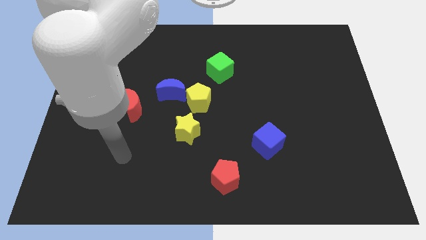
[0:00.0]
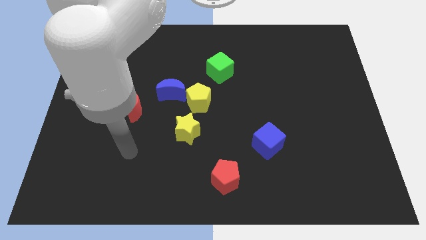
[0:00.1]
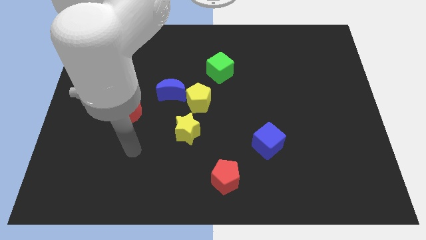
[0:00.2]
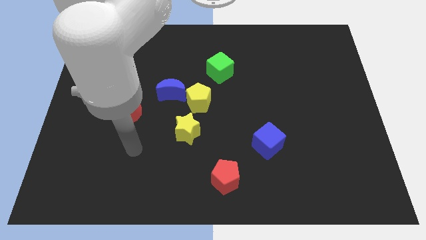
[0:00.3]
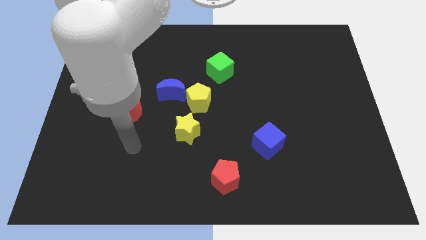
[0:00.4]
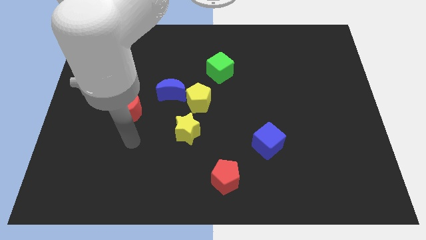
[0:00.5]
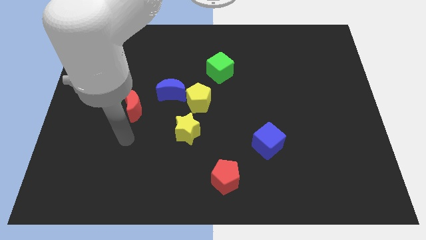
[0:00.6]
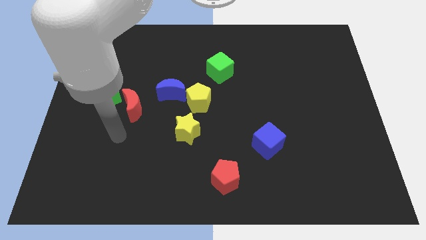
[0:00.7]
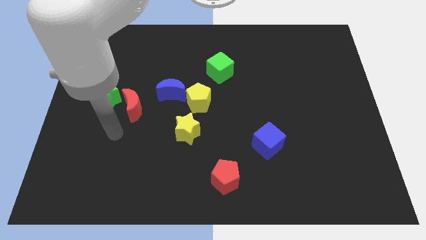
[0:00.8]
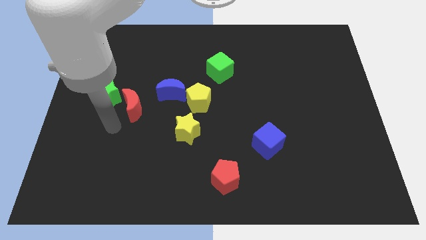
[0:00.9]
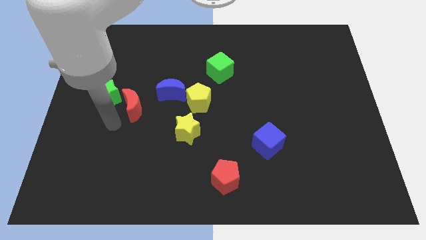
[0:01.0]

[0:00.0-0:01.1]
move arm near red moon

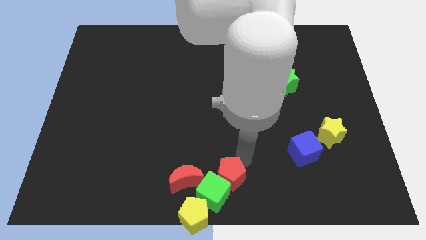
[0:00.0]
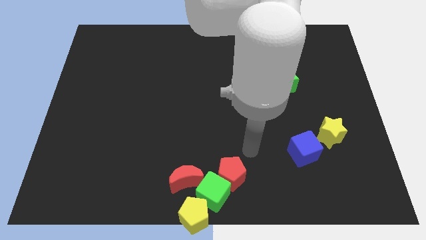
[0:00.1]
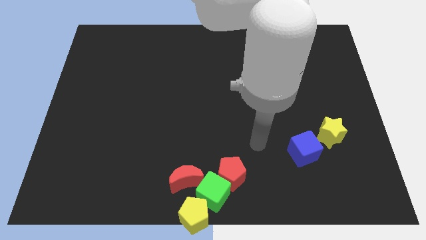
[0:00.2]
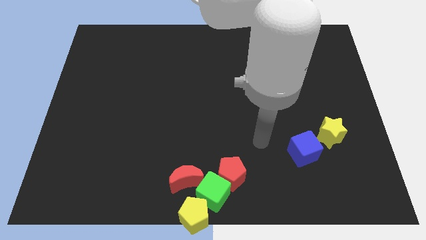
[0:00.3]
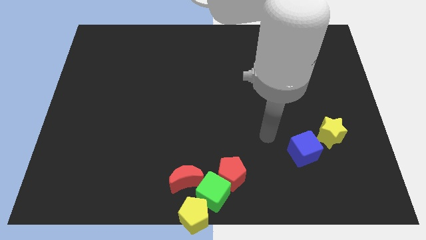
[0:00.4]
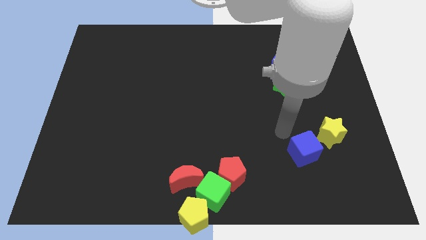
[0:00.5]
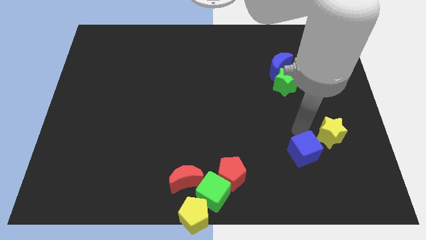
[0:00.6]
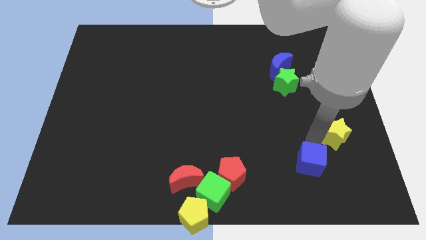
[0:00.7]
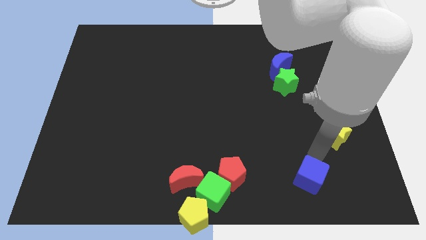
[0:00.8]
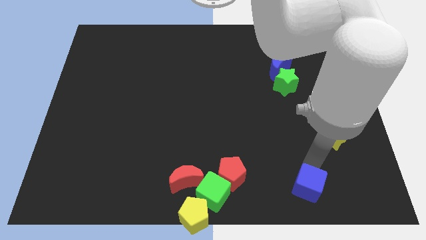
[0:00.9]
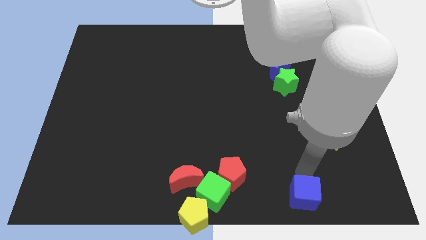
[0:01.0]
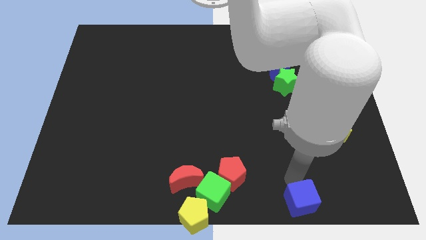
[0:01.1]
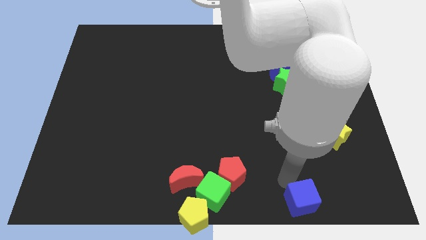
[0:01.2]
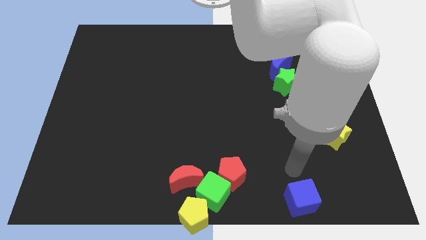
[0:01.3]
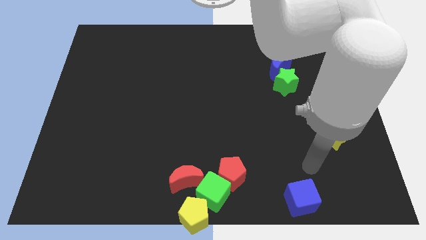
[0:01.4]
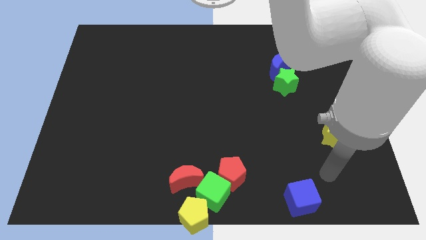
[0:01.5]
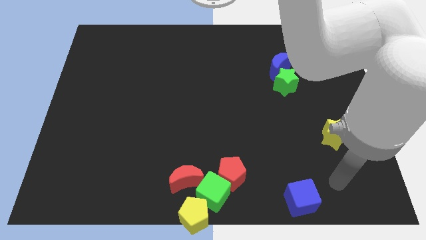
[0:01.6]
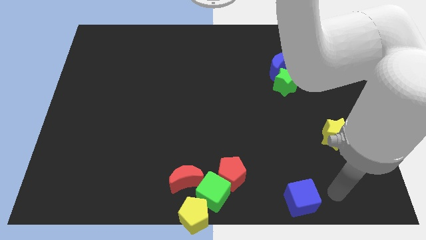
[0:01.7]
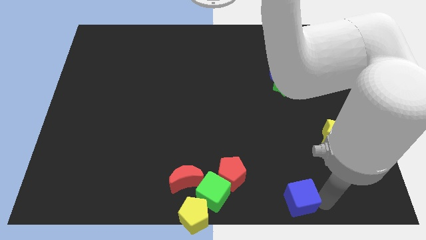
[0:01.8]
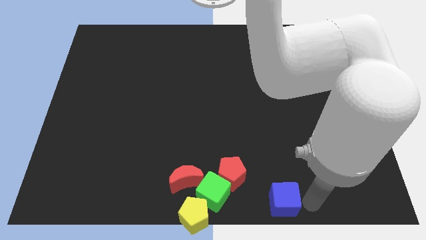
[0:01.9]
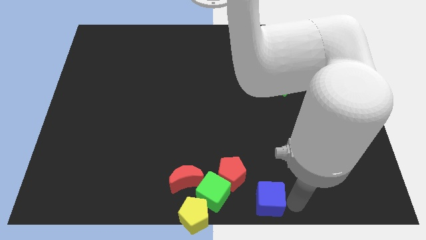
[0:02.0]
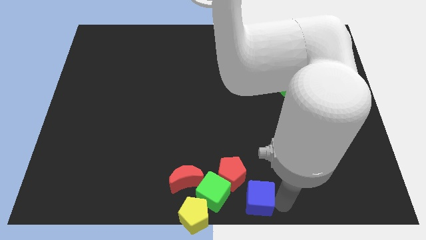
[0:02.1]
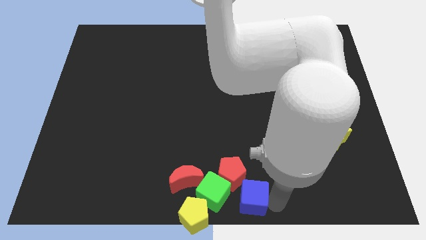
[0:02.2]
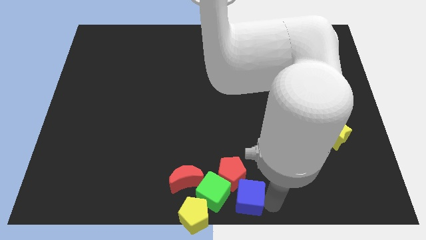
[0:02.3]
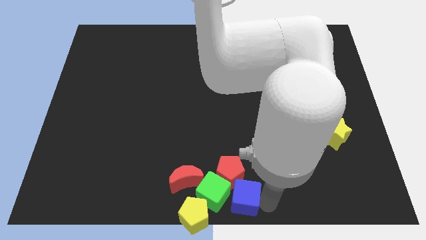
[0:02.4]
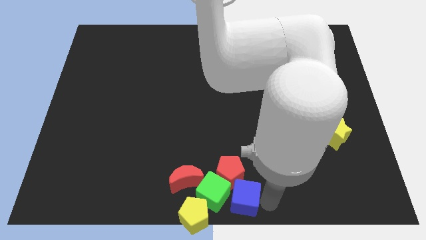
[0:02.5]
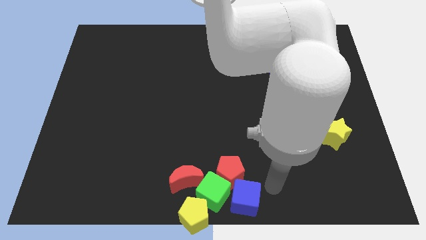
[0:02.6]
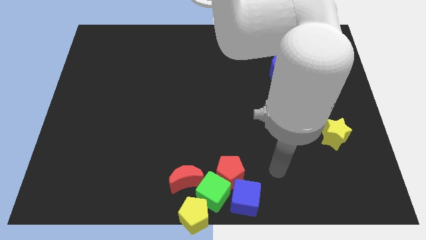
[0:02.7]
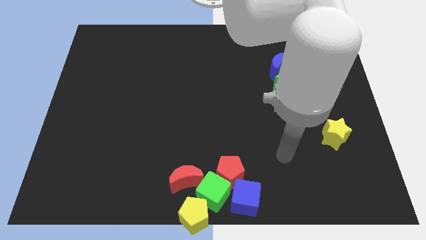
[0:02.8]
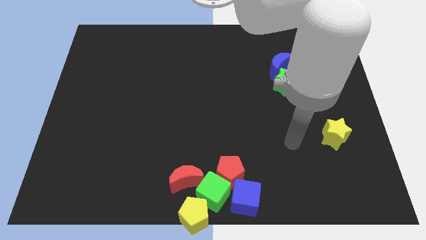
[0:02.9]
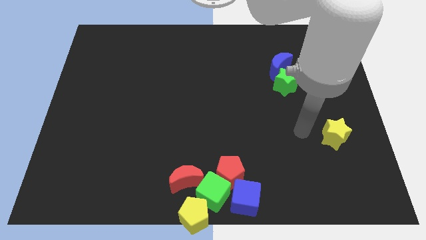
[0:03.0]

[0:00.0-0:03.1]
move the blue cube into the group of blocks

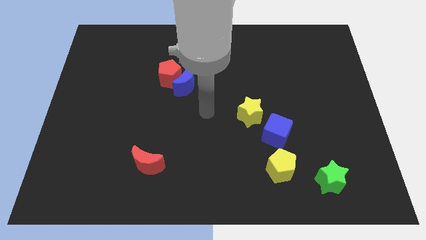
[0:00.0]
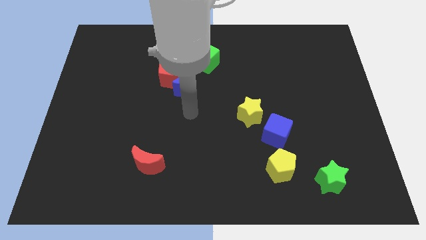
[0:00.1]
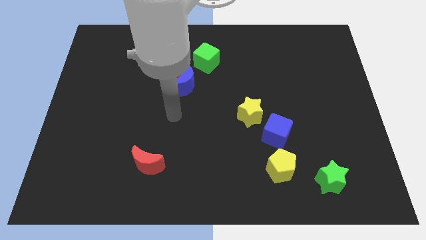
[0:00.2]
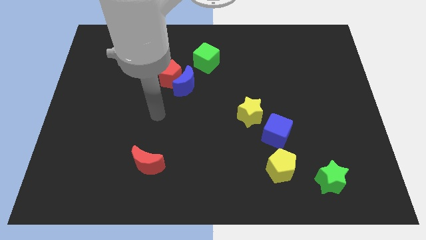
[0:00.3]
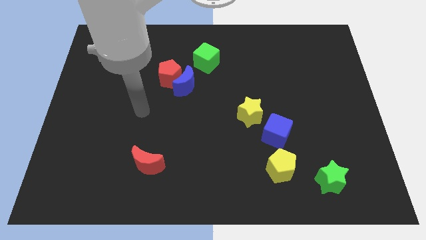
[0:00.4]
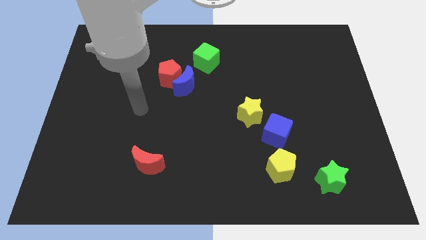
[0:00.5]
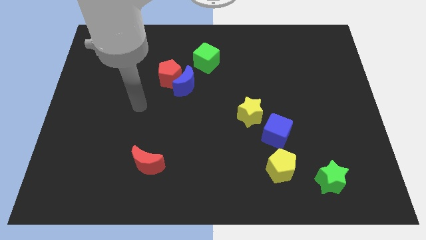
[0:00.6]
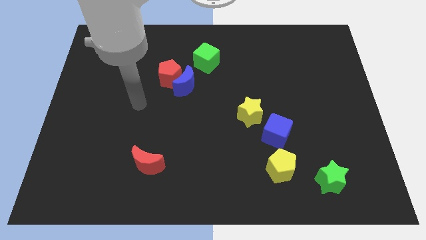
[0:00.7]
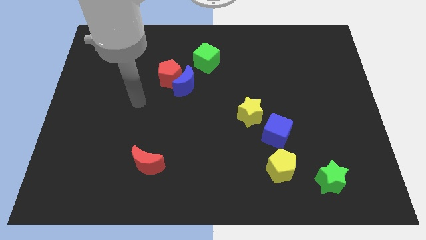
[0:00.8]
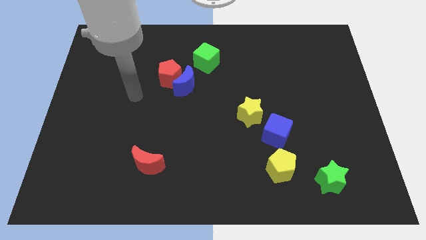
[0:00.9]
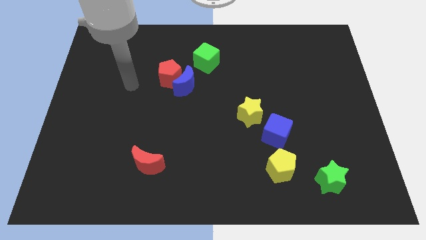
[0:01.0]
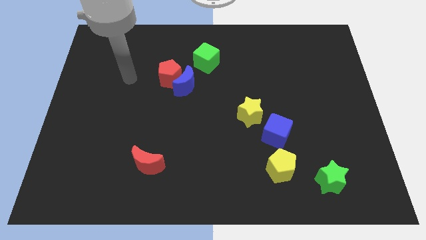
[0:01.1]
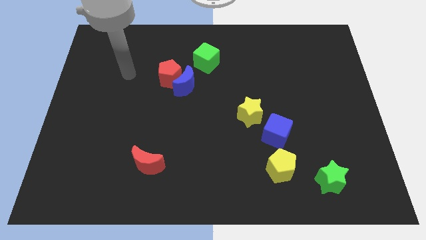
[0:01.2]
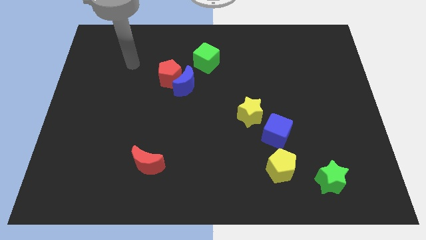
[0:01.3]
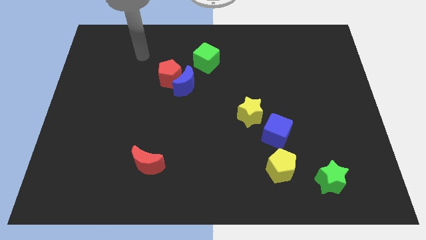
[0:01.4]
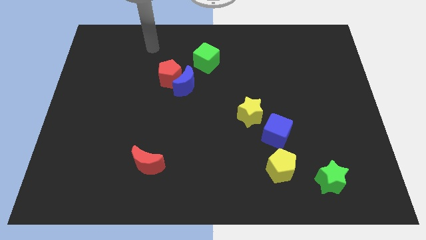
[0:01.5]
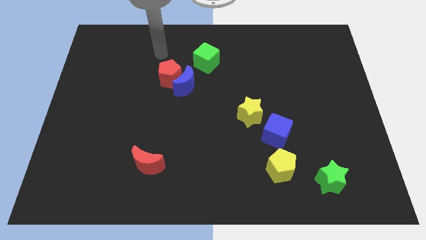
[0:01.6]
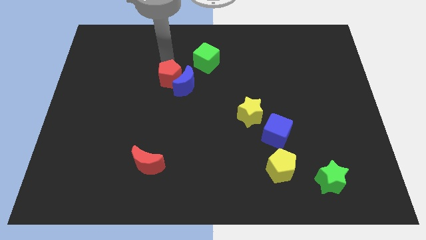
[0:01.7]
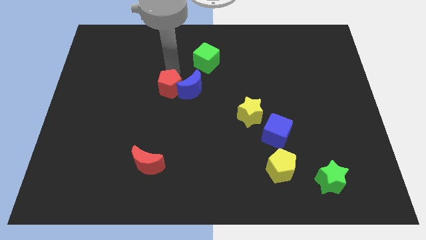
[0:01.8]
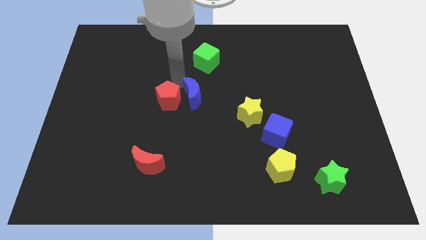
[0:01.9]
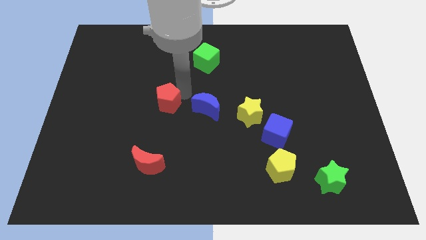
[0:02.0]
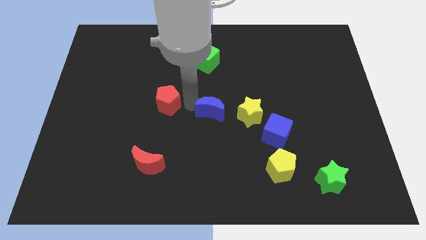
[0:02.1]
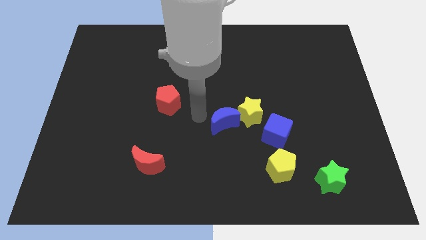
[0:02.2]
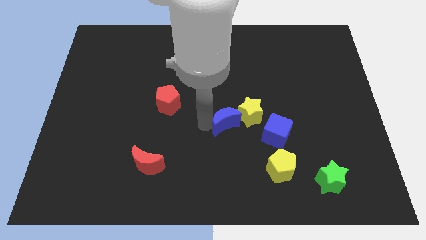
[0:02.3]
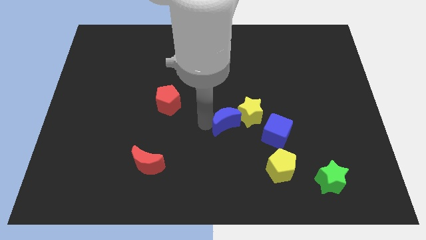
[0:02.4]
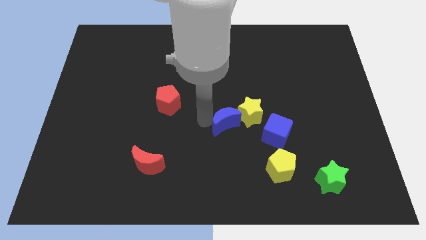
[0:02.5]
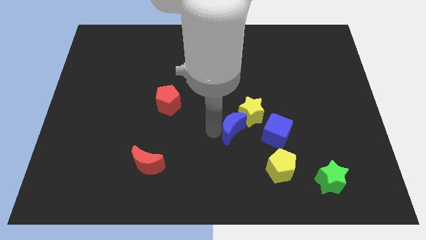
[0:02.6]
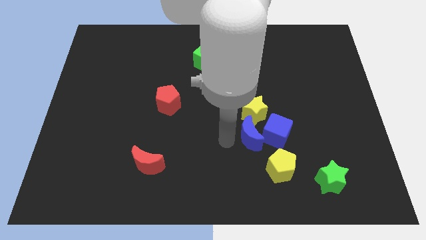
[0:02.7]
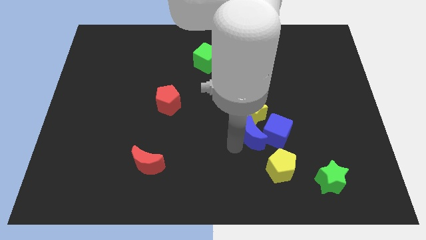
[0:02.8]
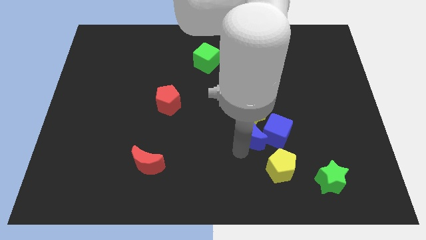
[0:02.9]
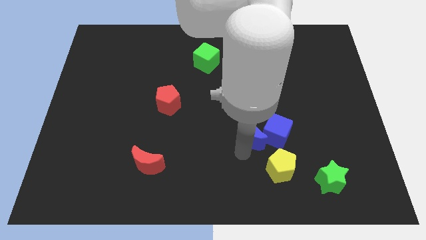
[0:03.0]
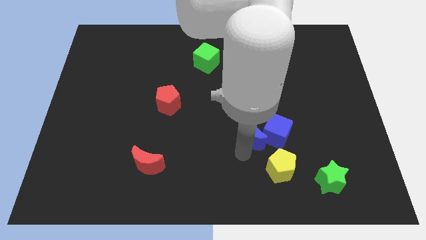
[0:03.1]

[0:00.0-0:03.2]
separate the blue moon from the red moon

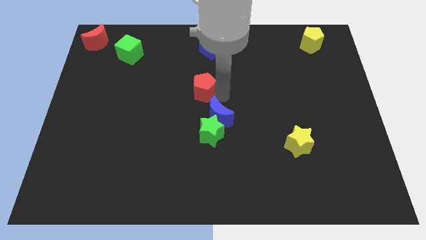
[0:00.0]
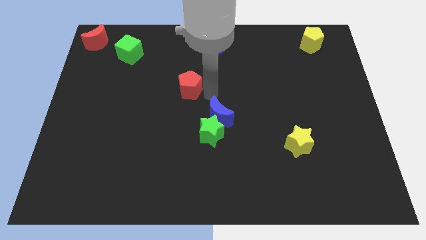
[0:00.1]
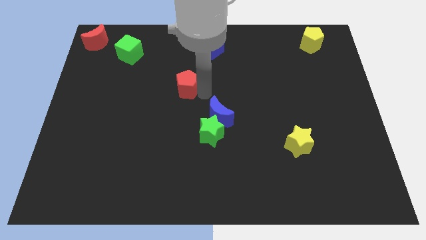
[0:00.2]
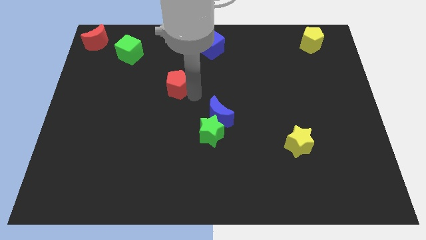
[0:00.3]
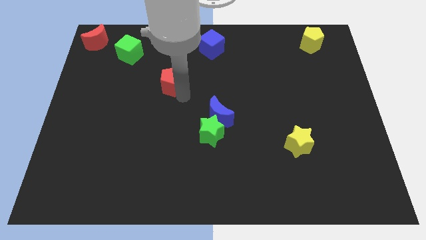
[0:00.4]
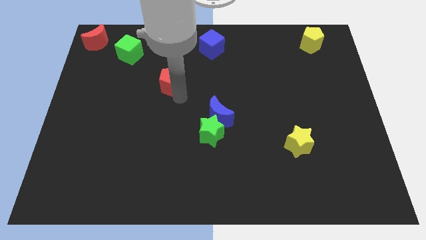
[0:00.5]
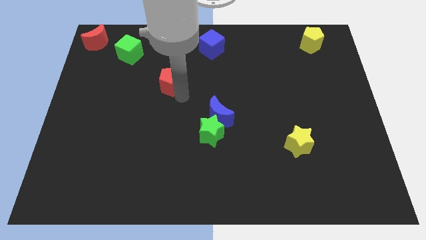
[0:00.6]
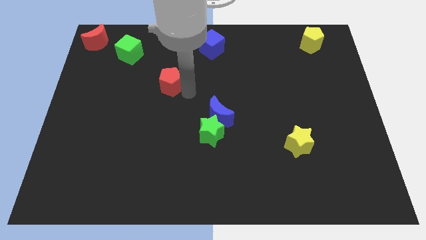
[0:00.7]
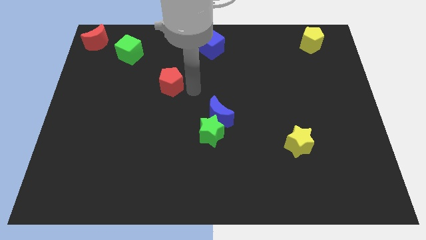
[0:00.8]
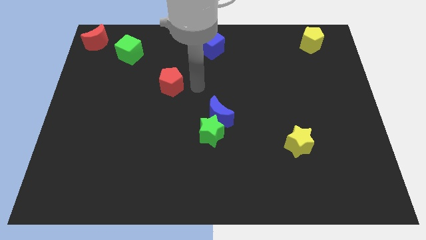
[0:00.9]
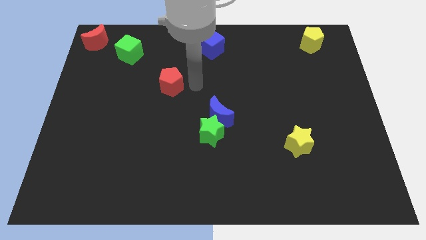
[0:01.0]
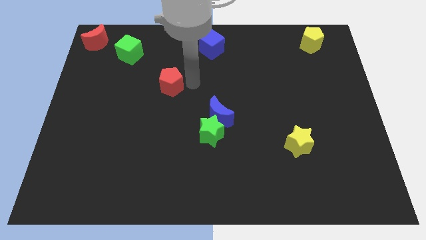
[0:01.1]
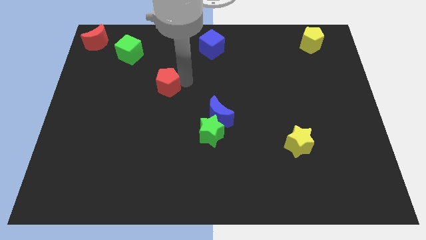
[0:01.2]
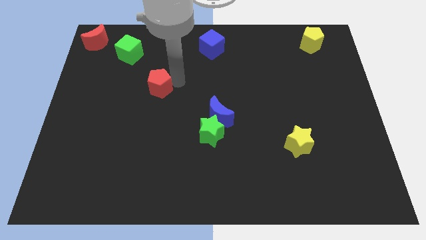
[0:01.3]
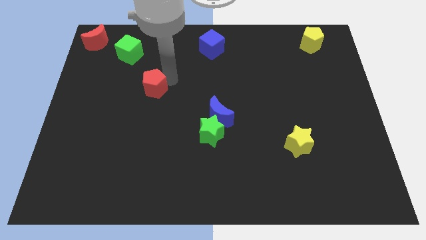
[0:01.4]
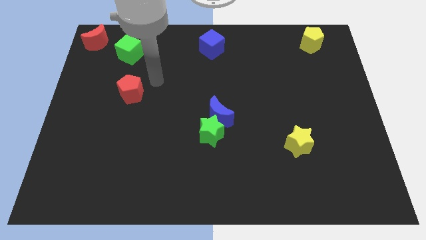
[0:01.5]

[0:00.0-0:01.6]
move the red pentagon to the bottom of the green cube
